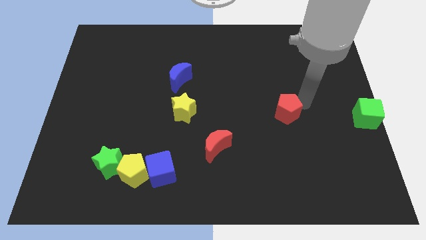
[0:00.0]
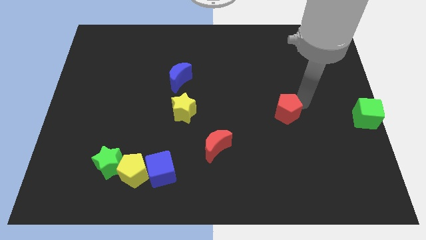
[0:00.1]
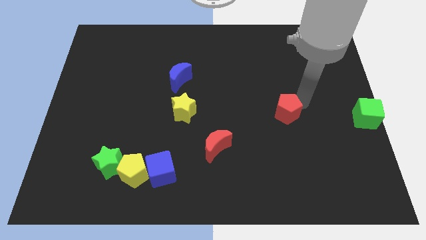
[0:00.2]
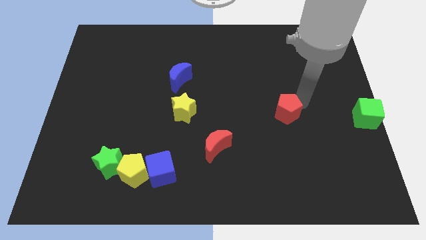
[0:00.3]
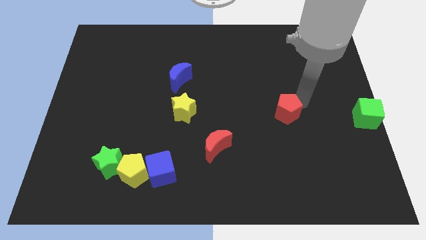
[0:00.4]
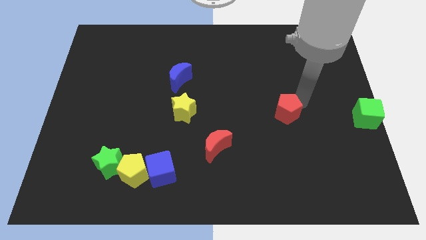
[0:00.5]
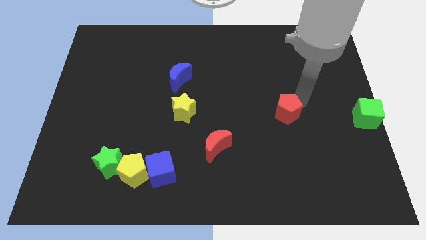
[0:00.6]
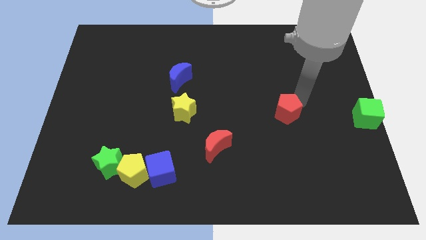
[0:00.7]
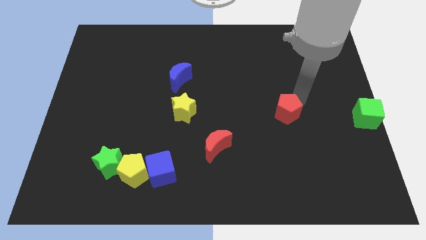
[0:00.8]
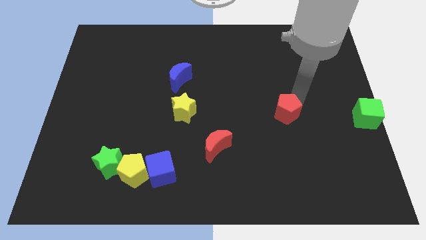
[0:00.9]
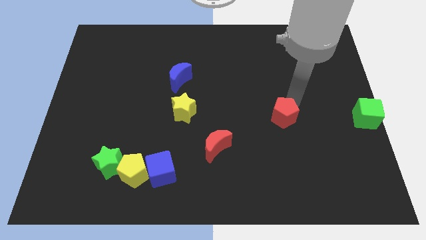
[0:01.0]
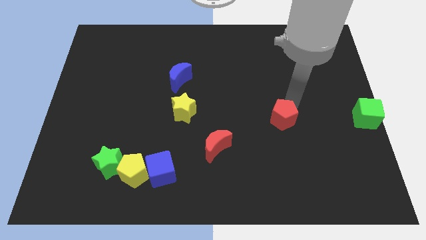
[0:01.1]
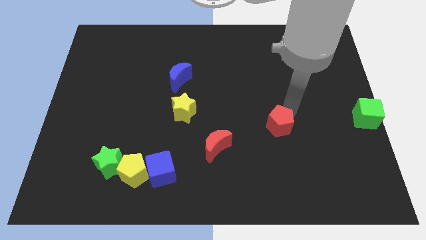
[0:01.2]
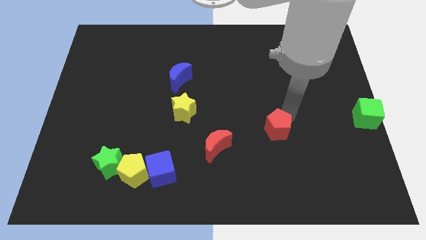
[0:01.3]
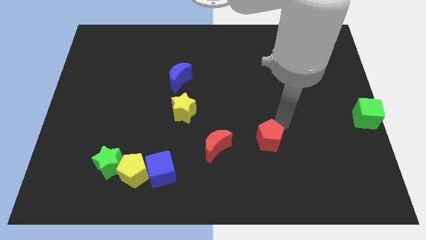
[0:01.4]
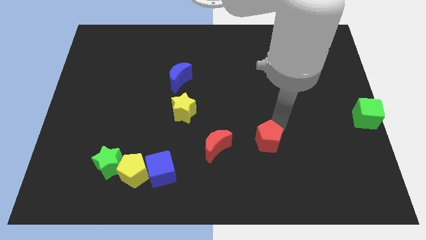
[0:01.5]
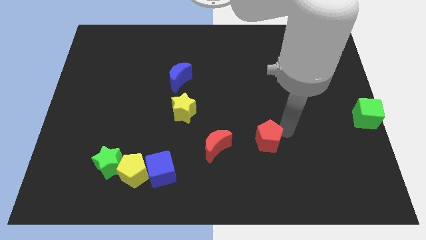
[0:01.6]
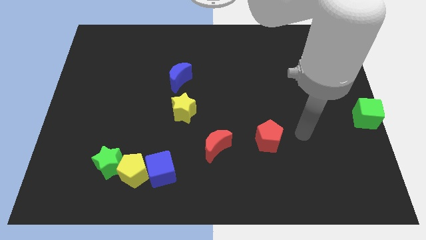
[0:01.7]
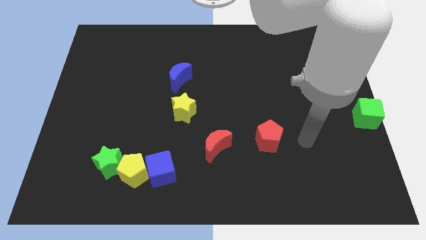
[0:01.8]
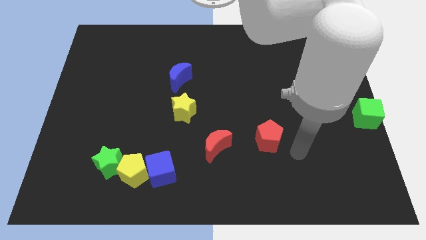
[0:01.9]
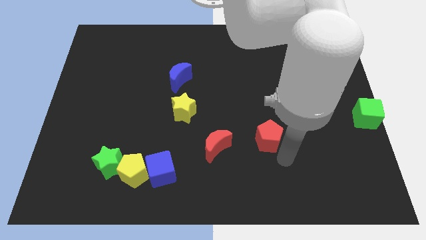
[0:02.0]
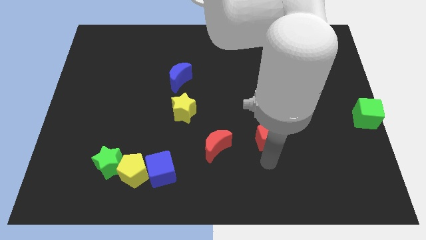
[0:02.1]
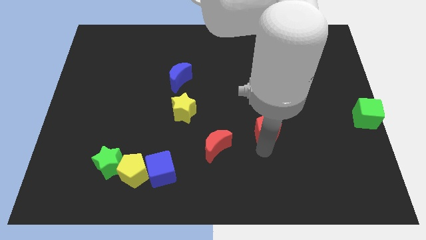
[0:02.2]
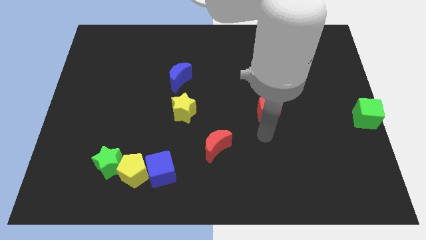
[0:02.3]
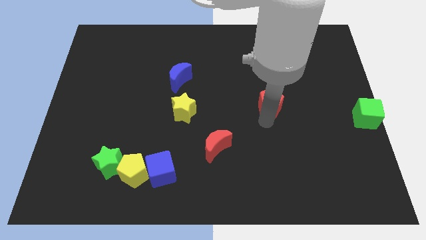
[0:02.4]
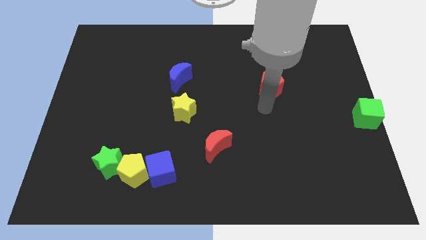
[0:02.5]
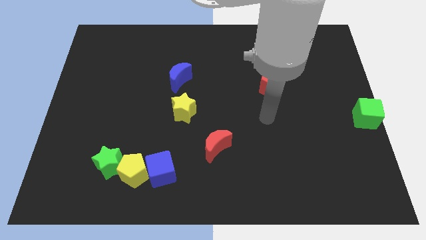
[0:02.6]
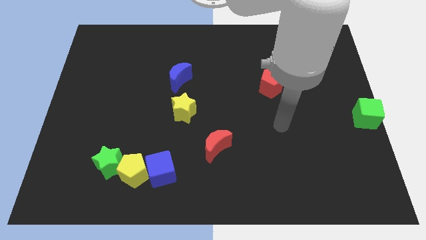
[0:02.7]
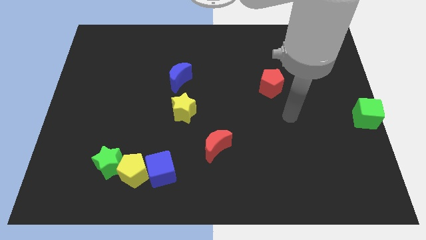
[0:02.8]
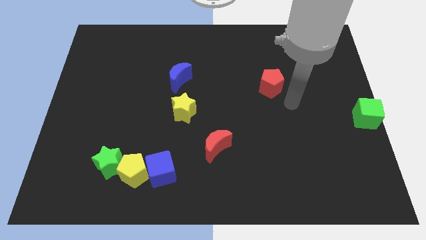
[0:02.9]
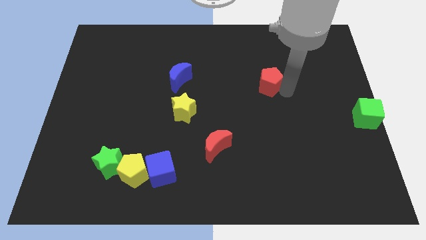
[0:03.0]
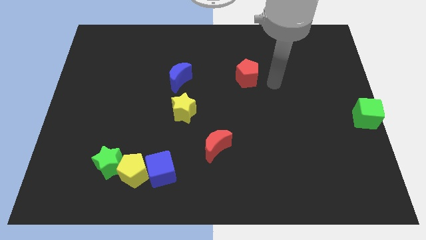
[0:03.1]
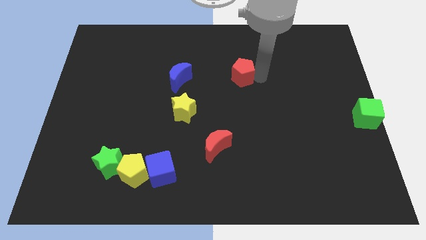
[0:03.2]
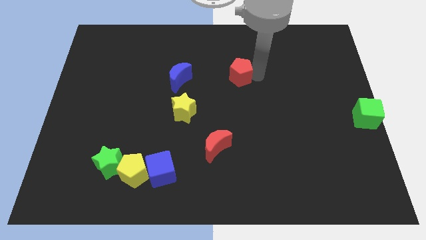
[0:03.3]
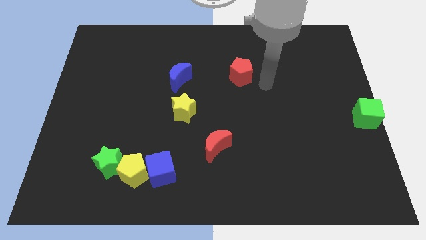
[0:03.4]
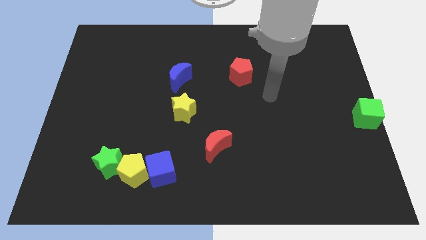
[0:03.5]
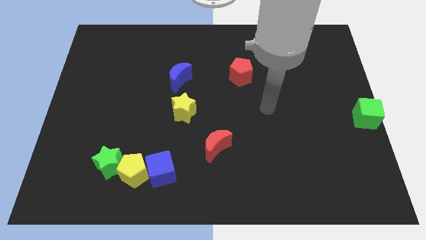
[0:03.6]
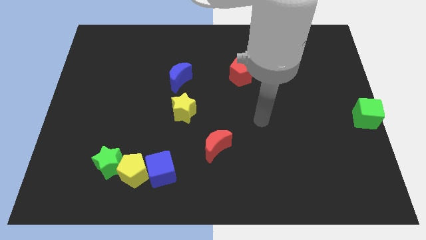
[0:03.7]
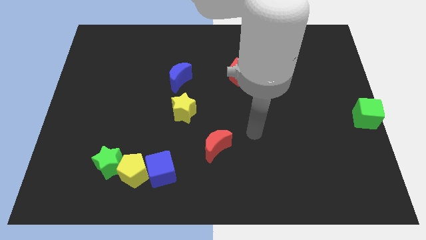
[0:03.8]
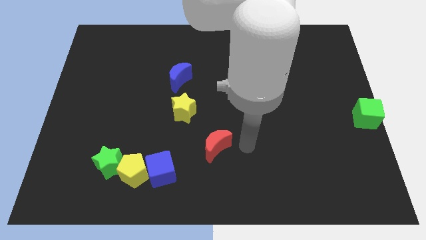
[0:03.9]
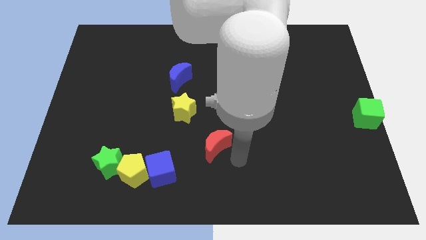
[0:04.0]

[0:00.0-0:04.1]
push the red pentagon upwards

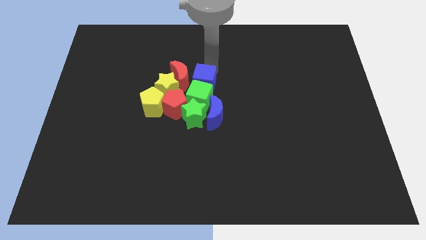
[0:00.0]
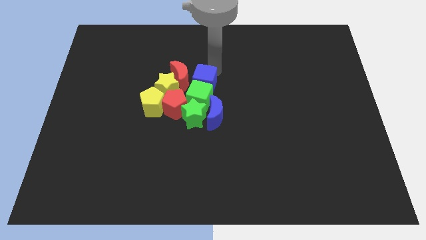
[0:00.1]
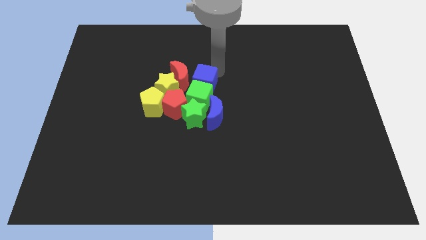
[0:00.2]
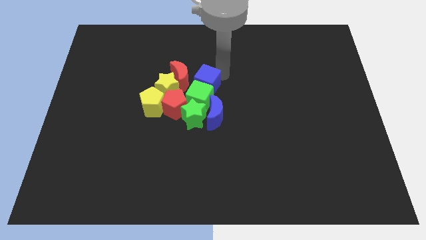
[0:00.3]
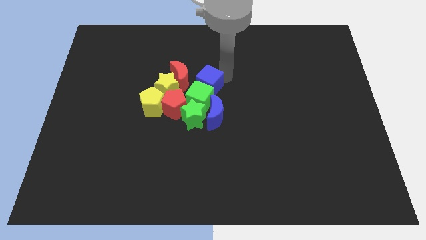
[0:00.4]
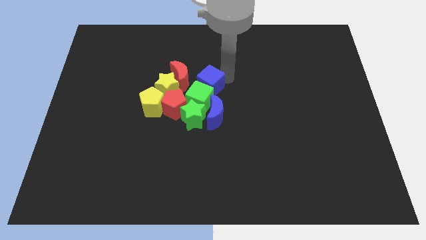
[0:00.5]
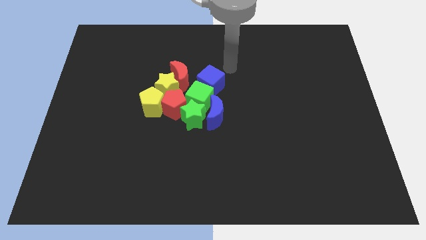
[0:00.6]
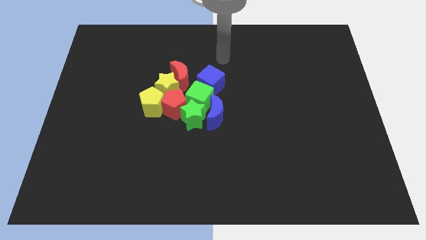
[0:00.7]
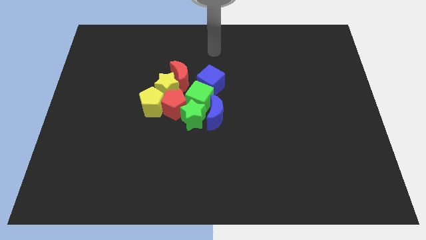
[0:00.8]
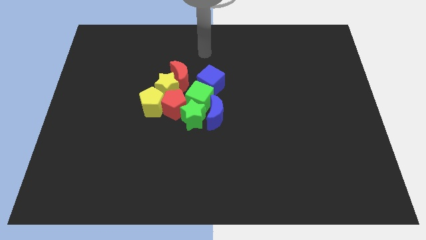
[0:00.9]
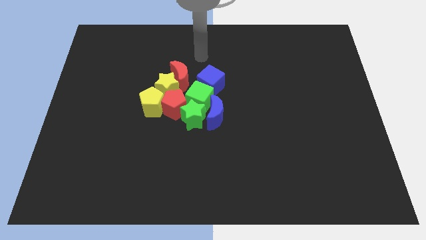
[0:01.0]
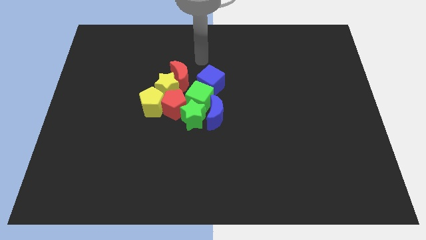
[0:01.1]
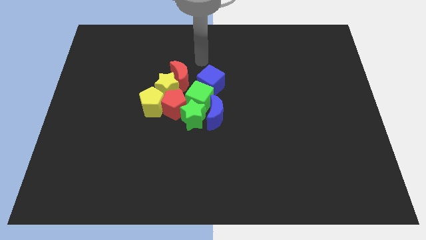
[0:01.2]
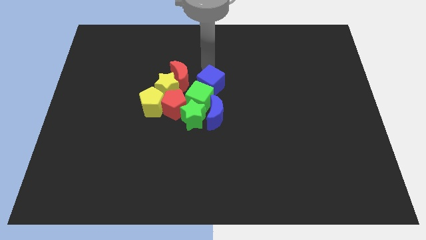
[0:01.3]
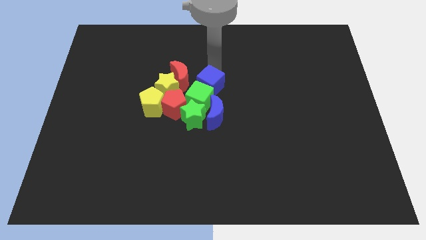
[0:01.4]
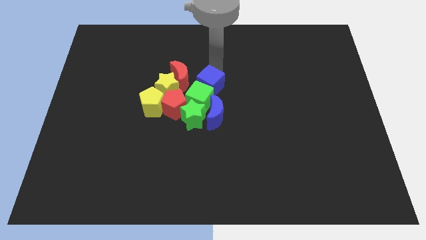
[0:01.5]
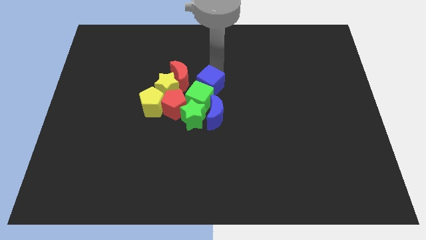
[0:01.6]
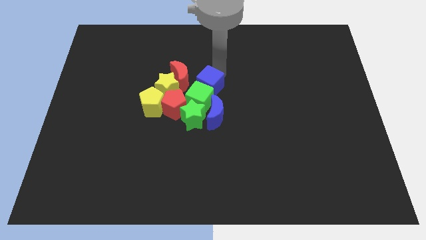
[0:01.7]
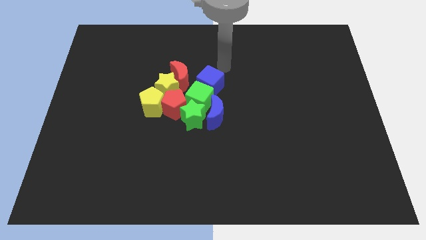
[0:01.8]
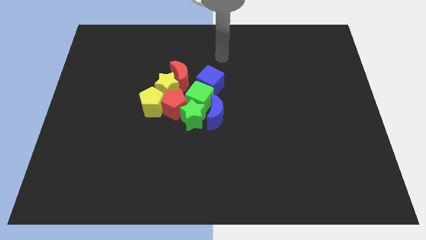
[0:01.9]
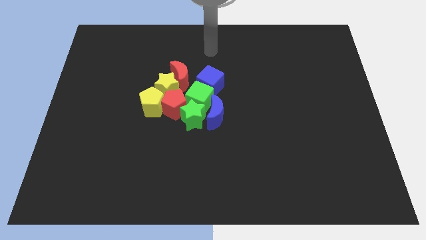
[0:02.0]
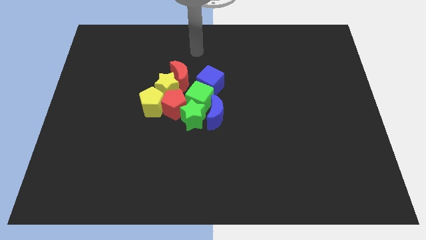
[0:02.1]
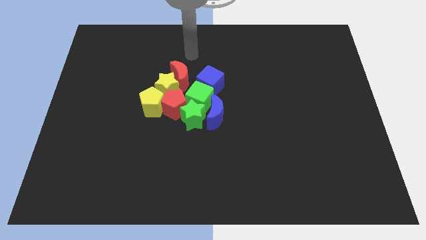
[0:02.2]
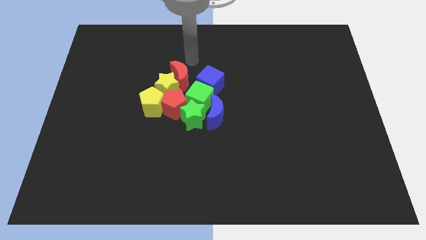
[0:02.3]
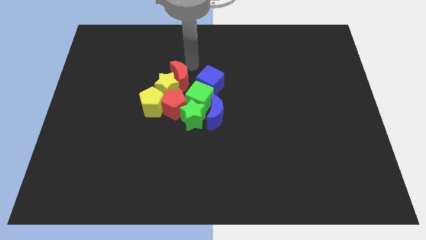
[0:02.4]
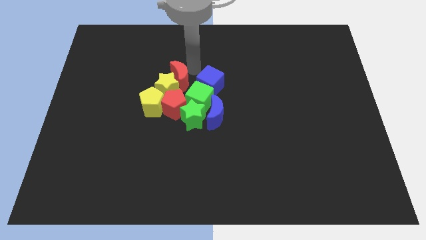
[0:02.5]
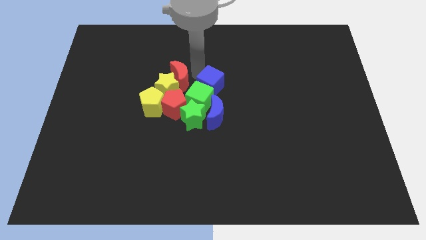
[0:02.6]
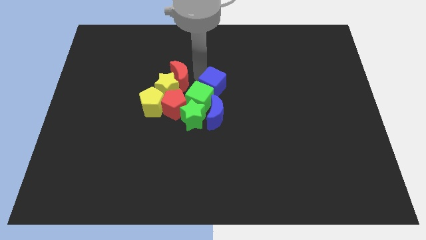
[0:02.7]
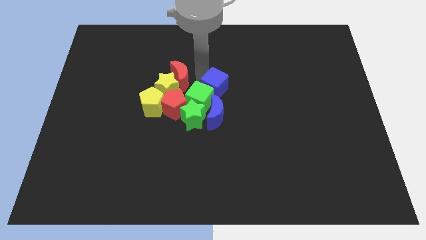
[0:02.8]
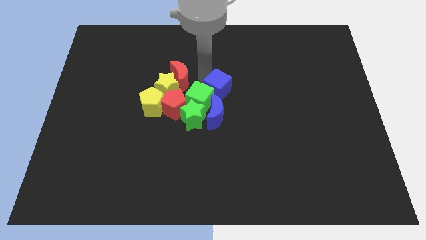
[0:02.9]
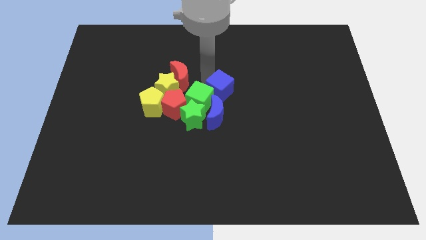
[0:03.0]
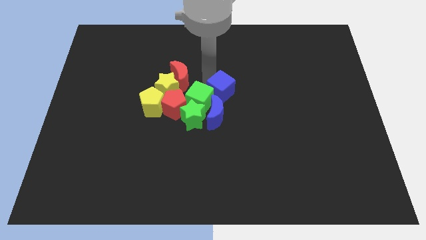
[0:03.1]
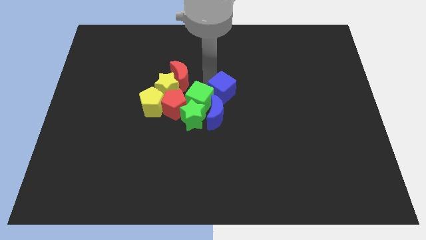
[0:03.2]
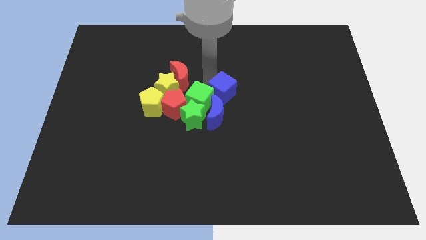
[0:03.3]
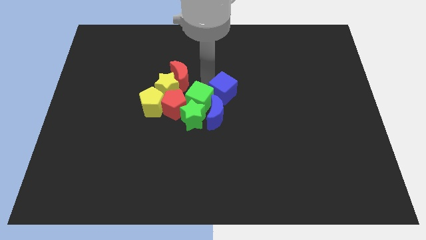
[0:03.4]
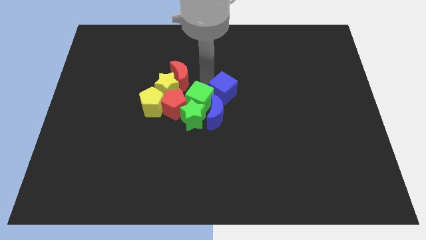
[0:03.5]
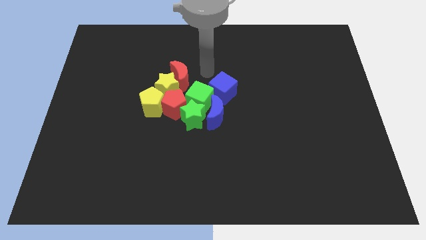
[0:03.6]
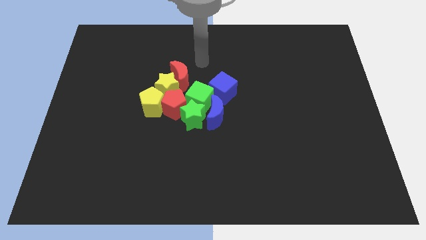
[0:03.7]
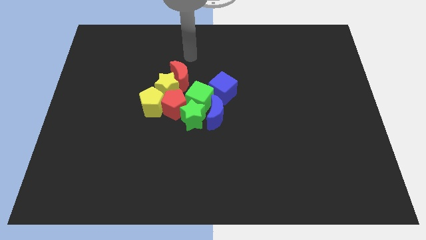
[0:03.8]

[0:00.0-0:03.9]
place the blue cube above the blue crescent

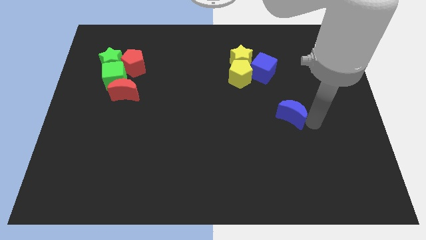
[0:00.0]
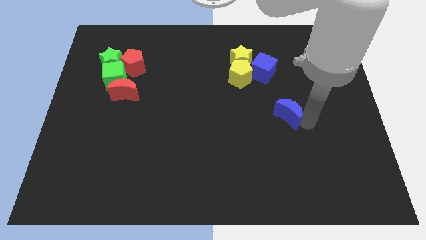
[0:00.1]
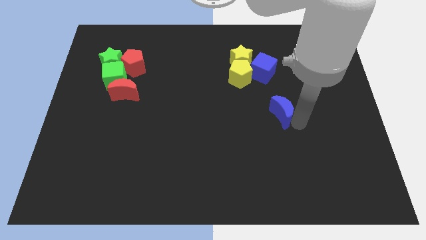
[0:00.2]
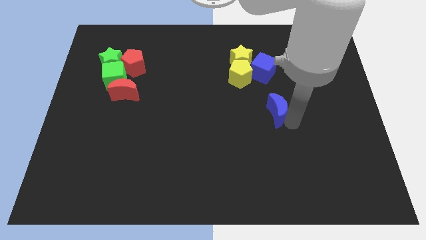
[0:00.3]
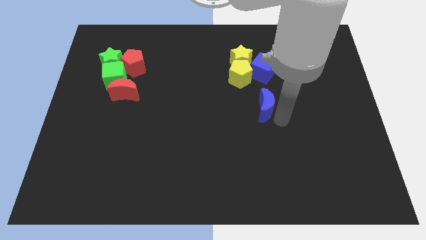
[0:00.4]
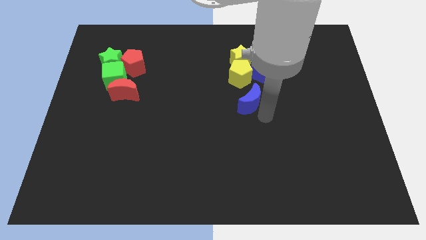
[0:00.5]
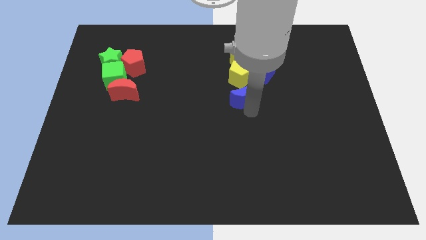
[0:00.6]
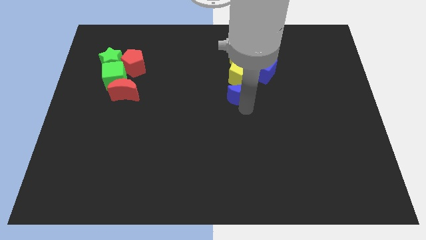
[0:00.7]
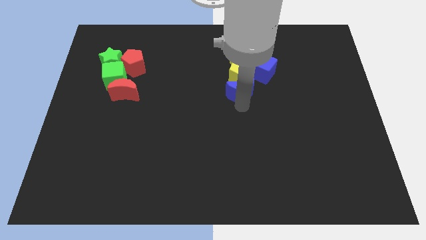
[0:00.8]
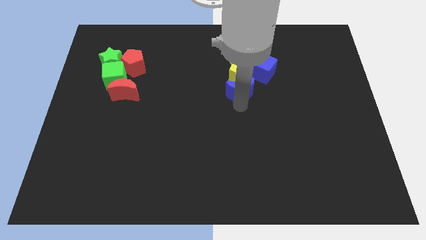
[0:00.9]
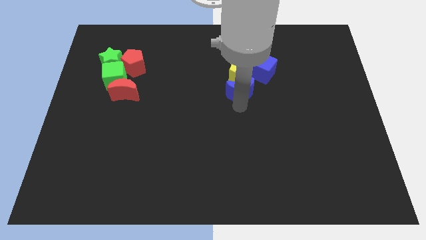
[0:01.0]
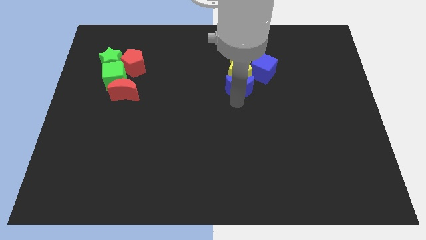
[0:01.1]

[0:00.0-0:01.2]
slide blue crescent towards yellow pentagon
